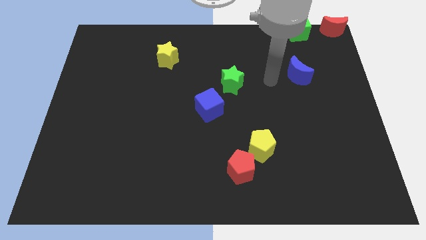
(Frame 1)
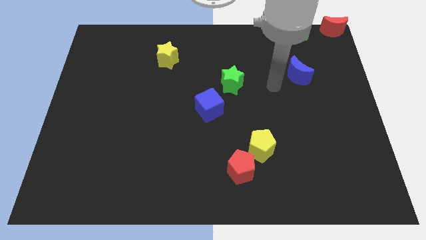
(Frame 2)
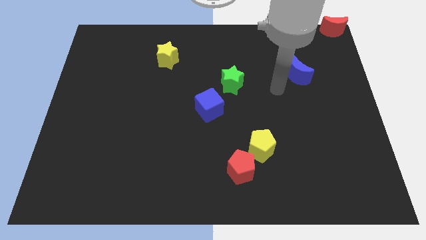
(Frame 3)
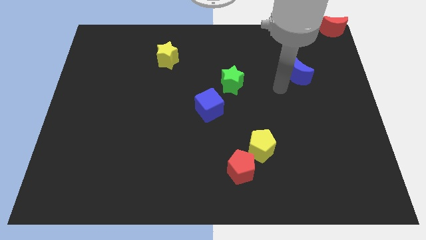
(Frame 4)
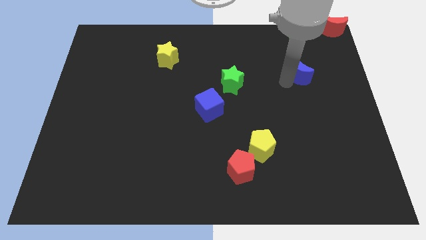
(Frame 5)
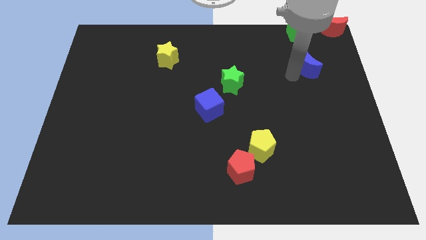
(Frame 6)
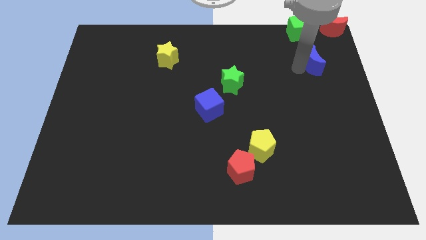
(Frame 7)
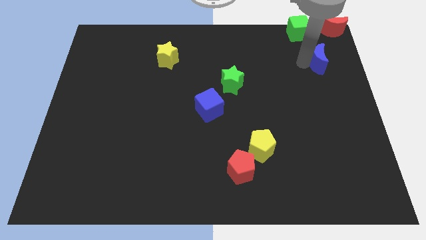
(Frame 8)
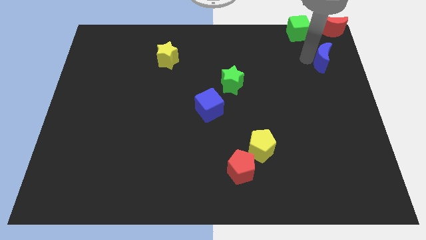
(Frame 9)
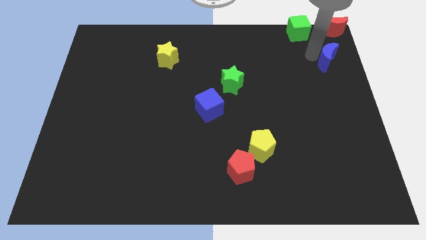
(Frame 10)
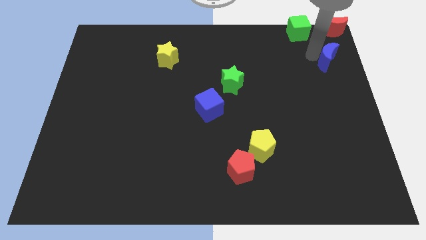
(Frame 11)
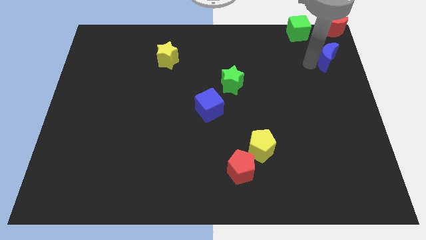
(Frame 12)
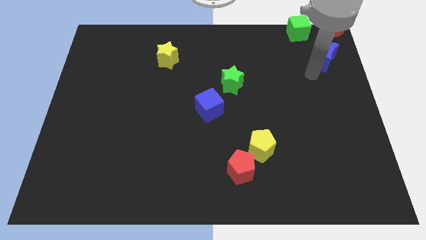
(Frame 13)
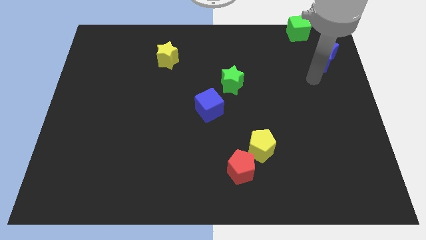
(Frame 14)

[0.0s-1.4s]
put the blue moon diagonally bottom right to the green cube

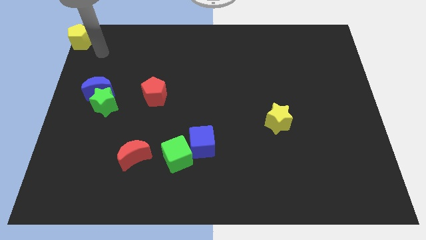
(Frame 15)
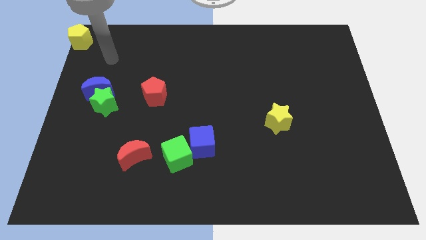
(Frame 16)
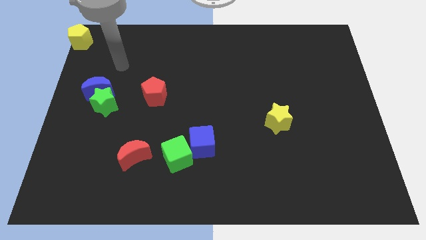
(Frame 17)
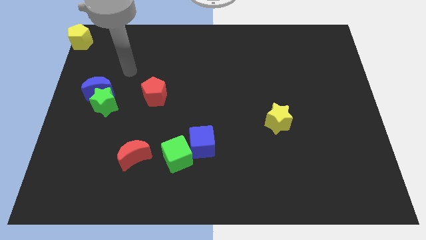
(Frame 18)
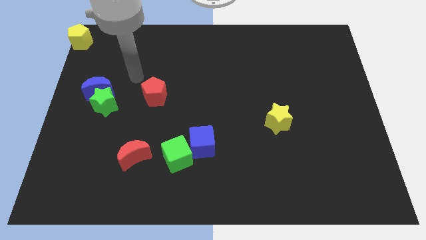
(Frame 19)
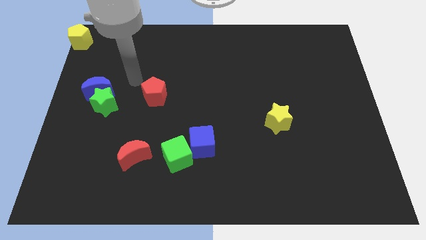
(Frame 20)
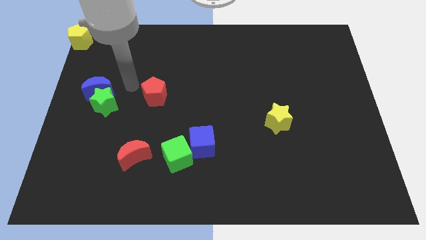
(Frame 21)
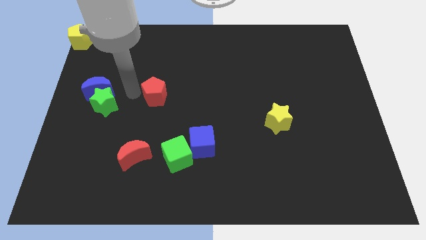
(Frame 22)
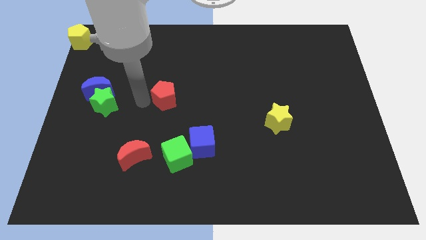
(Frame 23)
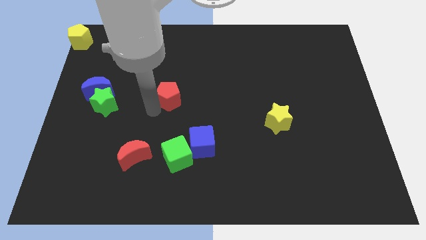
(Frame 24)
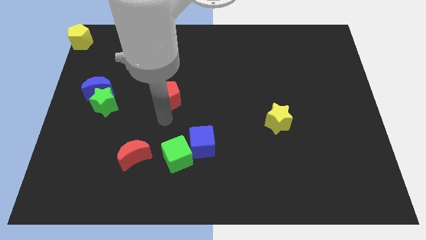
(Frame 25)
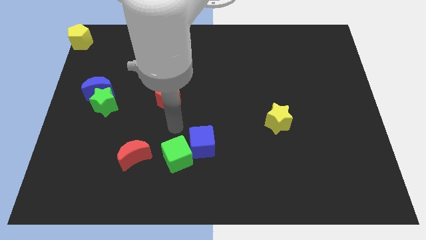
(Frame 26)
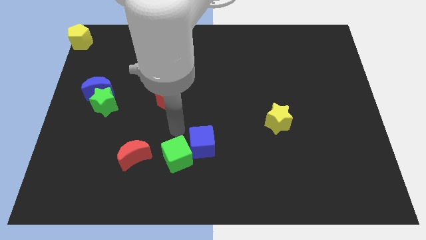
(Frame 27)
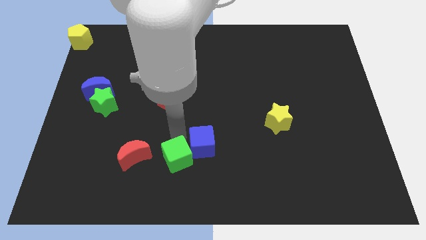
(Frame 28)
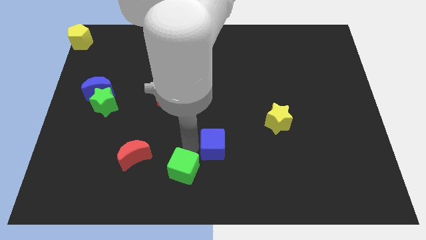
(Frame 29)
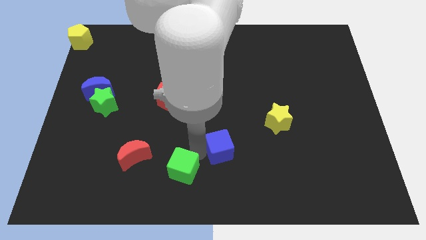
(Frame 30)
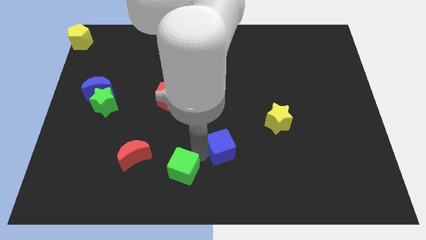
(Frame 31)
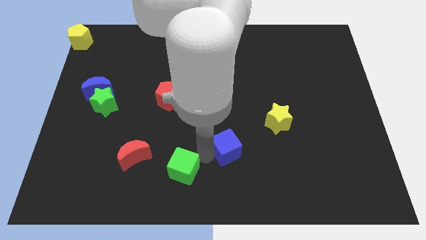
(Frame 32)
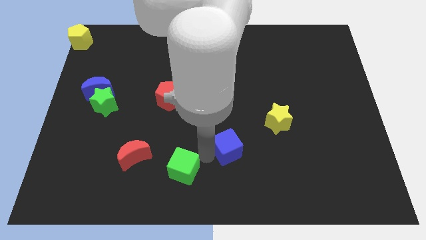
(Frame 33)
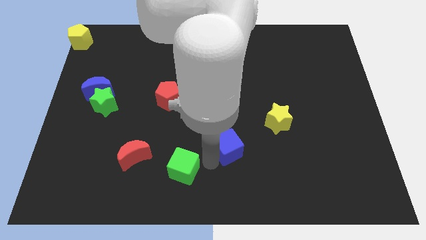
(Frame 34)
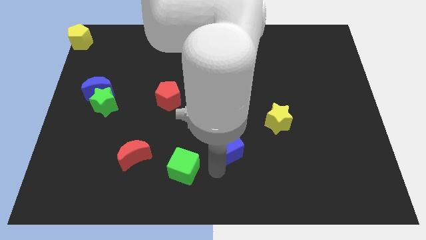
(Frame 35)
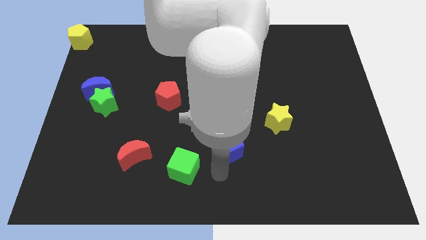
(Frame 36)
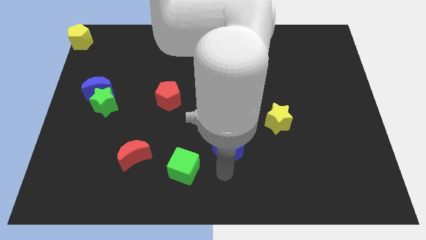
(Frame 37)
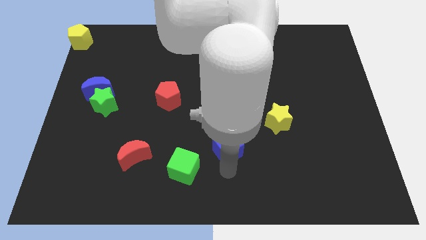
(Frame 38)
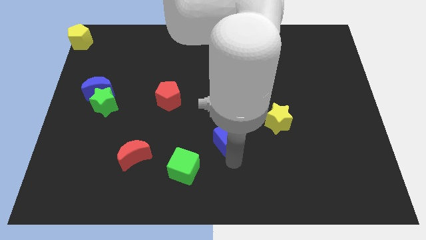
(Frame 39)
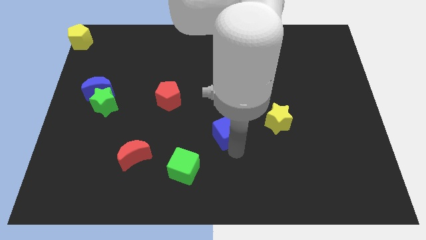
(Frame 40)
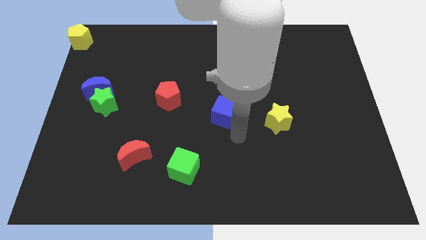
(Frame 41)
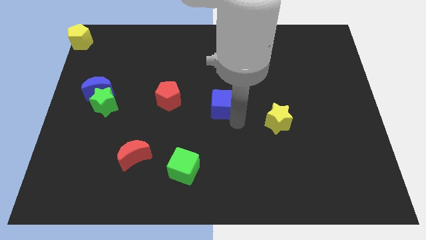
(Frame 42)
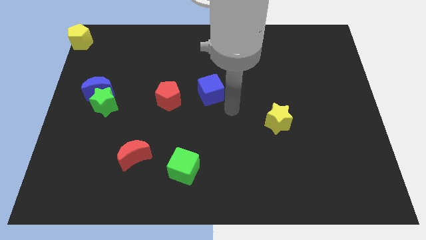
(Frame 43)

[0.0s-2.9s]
put the blue cube at the right side of the red pentagon

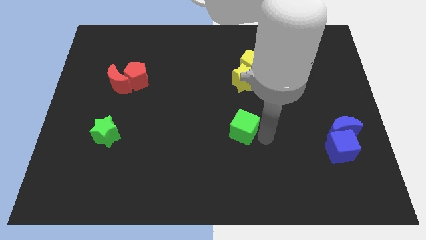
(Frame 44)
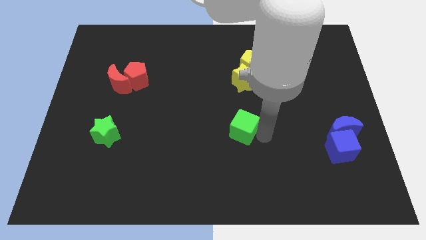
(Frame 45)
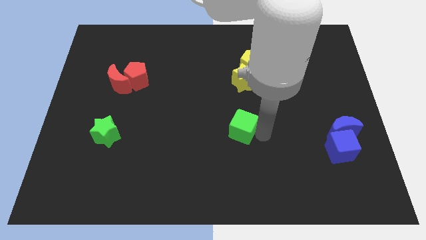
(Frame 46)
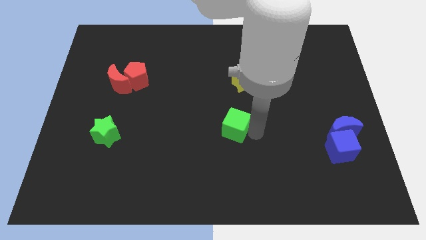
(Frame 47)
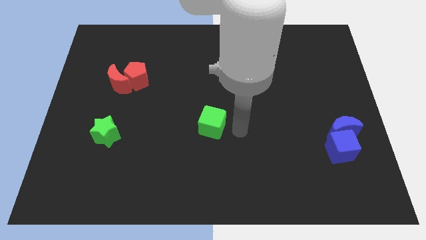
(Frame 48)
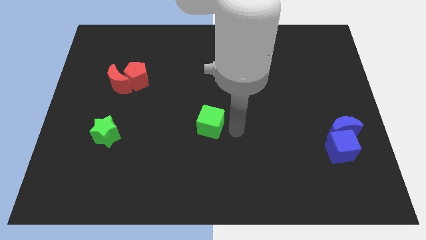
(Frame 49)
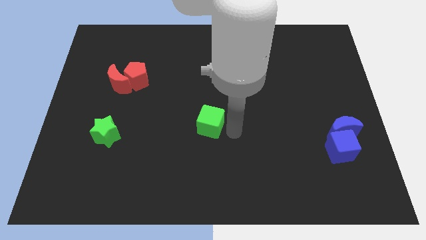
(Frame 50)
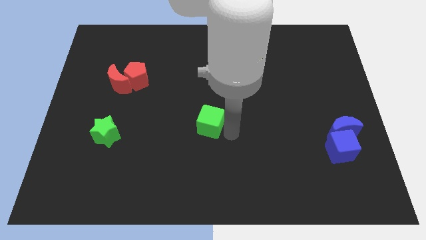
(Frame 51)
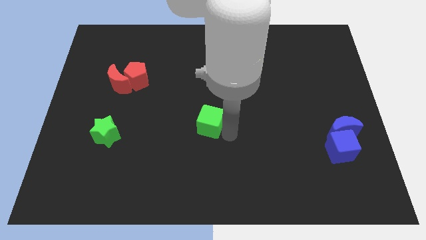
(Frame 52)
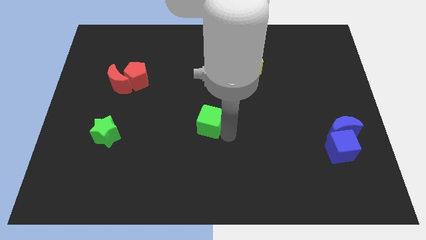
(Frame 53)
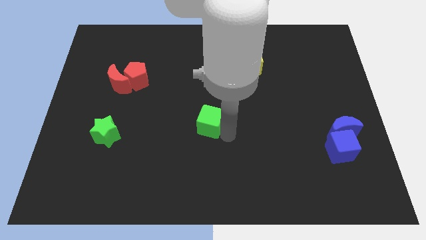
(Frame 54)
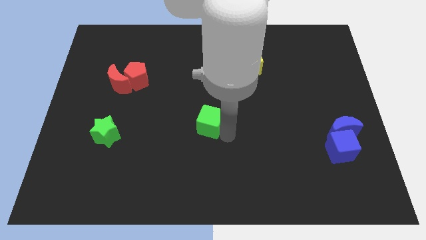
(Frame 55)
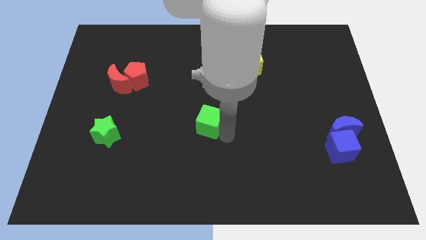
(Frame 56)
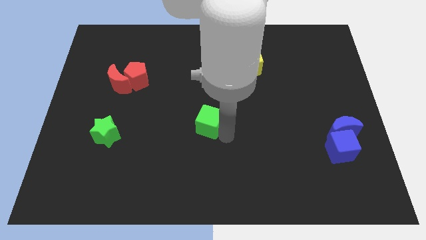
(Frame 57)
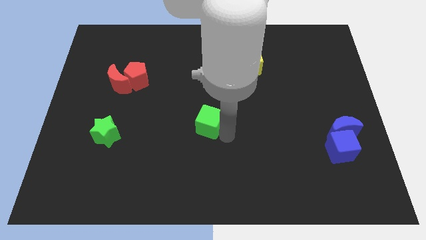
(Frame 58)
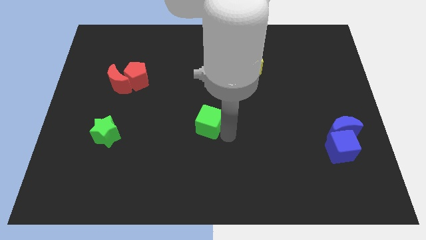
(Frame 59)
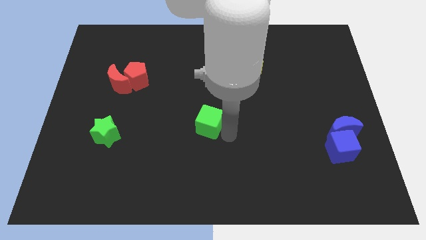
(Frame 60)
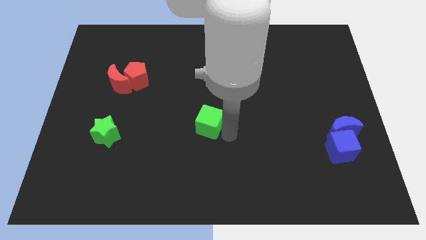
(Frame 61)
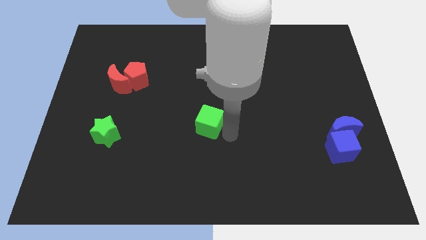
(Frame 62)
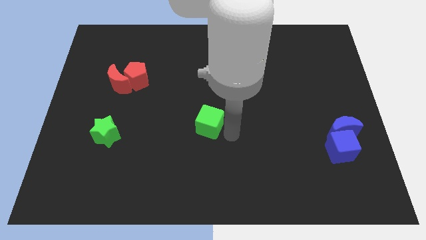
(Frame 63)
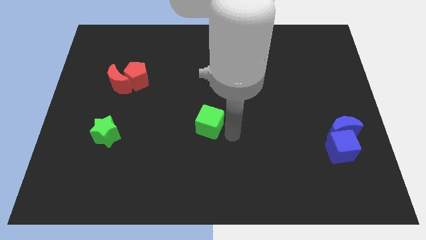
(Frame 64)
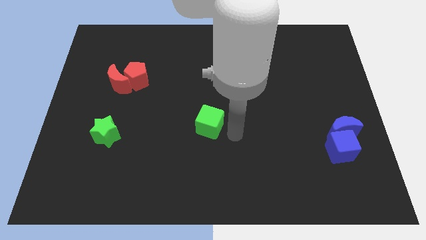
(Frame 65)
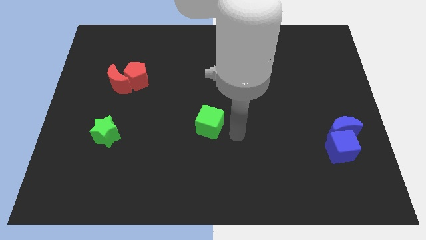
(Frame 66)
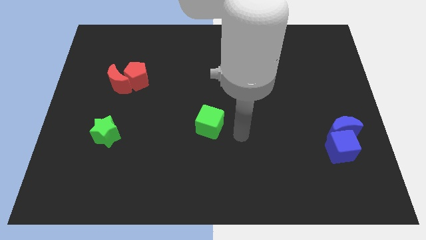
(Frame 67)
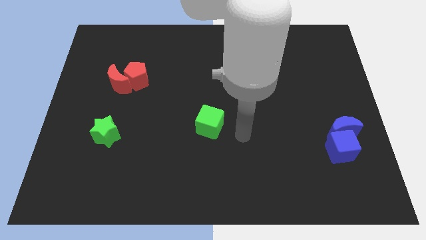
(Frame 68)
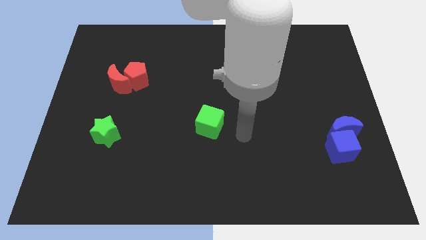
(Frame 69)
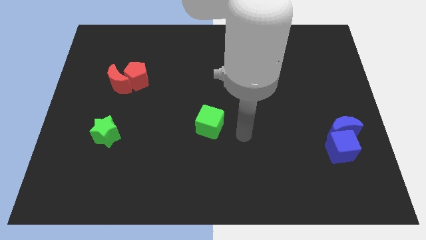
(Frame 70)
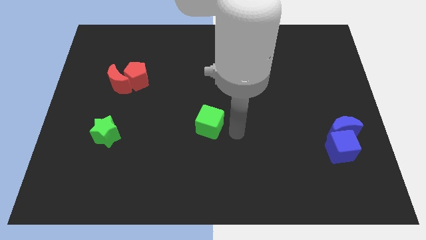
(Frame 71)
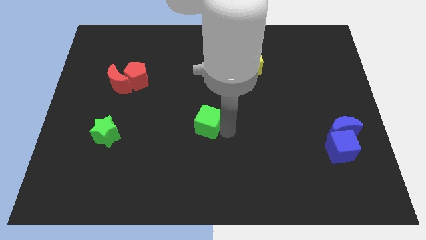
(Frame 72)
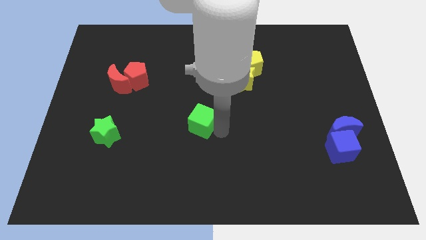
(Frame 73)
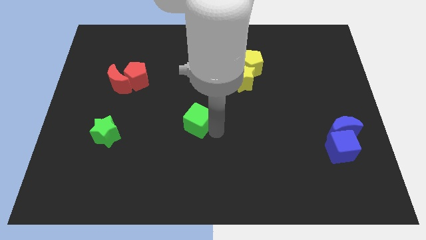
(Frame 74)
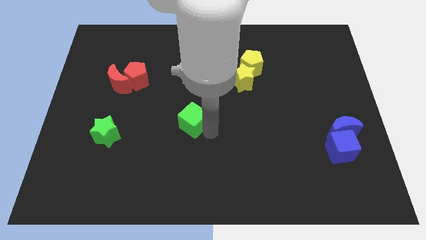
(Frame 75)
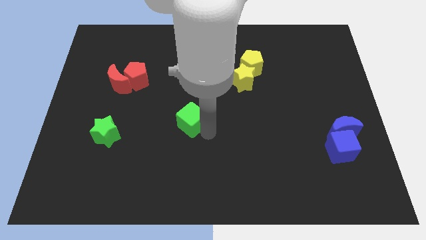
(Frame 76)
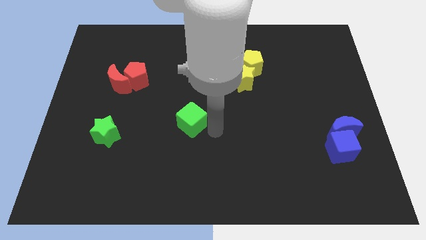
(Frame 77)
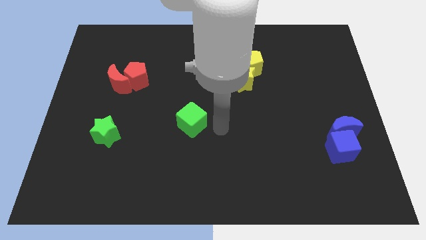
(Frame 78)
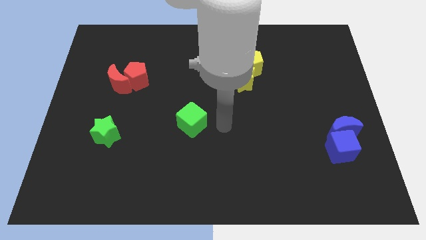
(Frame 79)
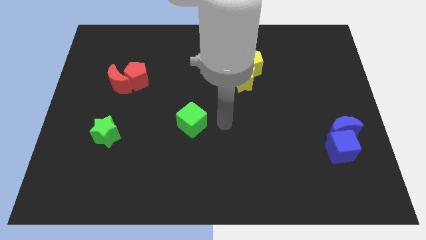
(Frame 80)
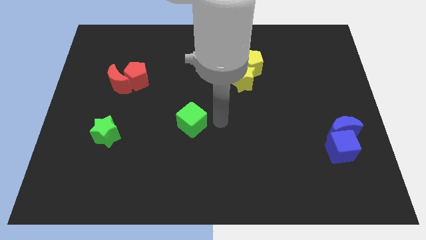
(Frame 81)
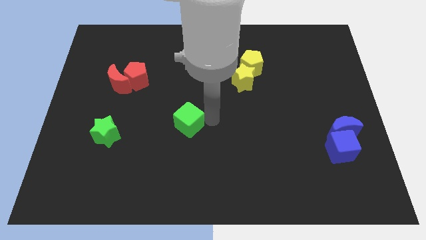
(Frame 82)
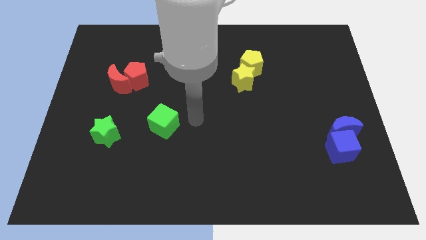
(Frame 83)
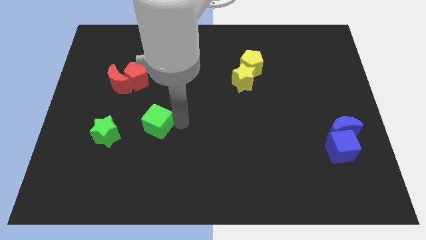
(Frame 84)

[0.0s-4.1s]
push the green cube towards the right side of the green star

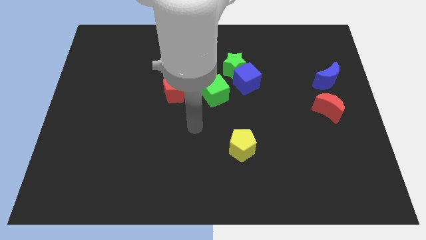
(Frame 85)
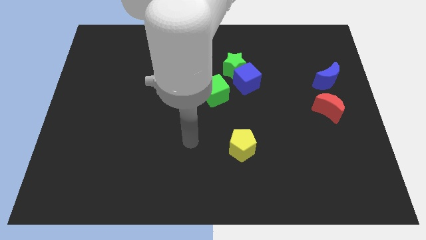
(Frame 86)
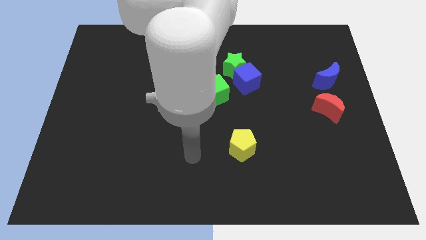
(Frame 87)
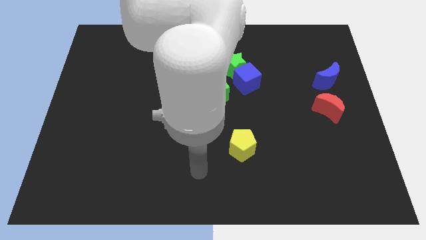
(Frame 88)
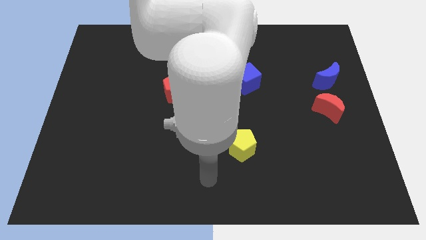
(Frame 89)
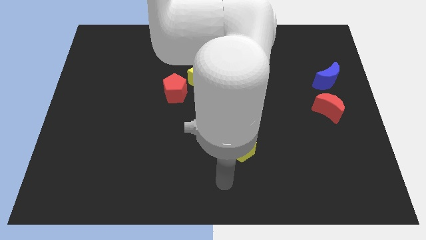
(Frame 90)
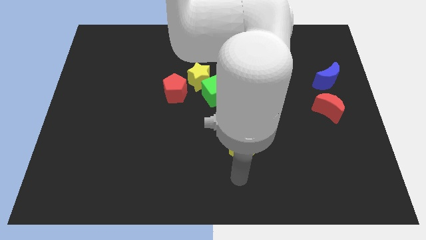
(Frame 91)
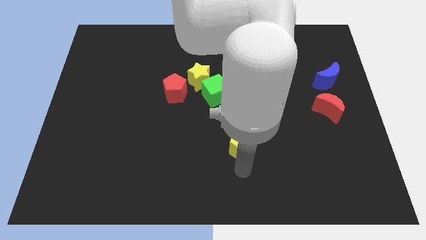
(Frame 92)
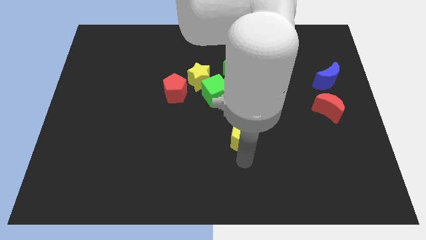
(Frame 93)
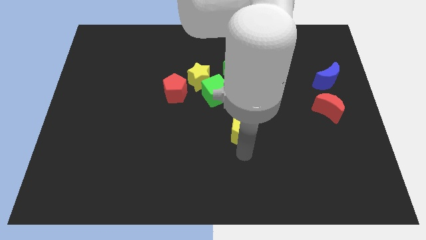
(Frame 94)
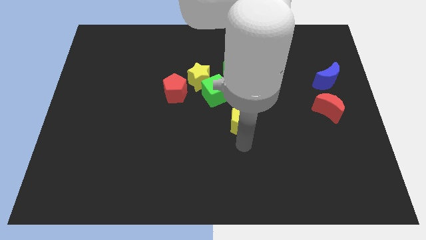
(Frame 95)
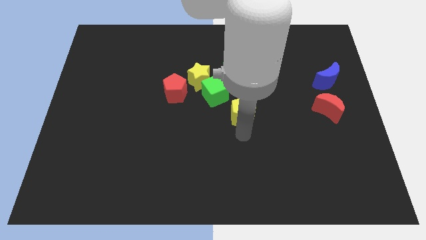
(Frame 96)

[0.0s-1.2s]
push the yellow pentagon to the center of the board
